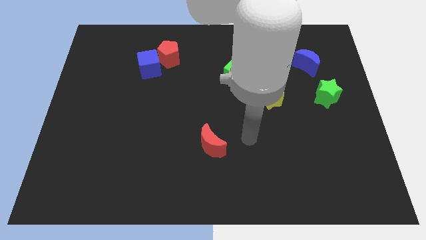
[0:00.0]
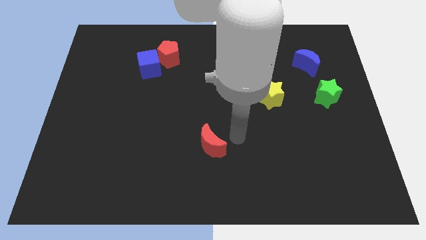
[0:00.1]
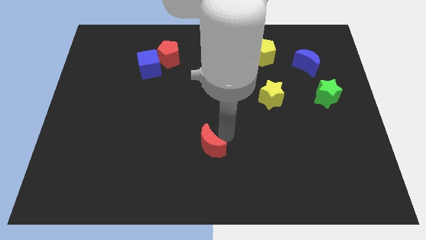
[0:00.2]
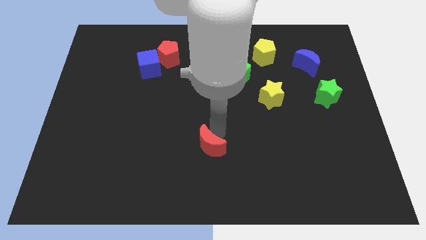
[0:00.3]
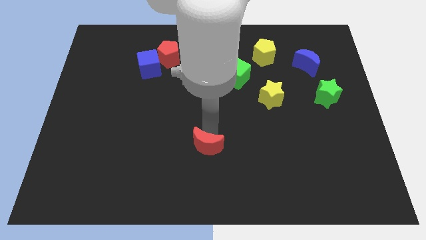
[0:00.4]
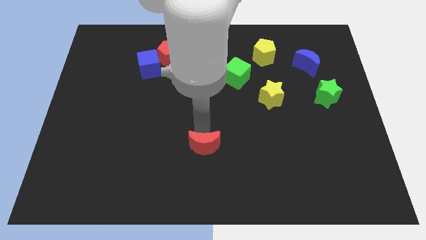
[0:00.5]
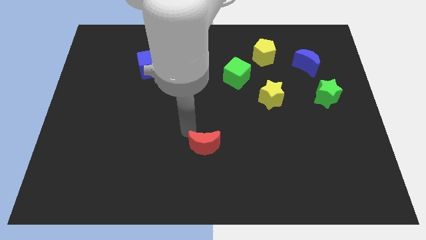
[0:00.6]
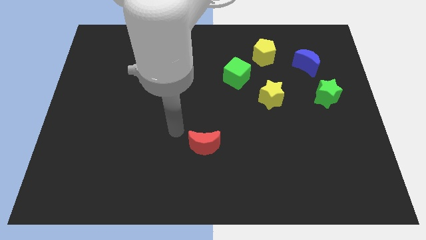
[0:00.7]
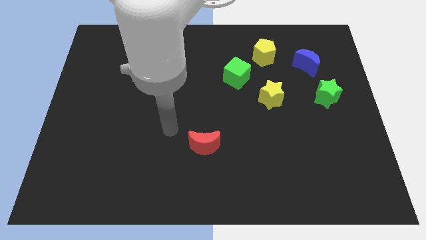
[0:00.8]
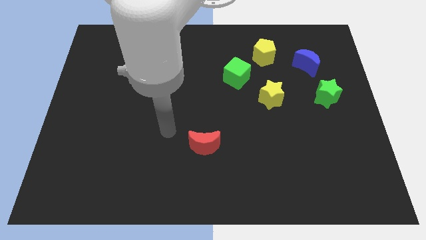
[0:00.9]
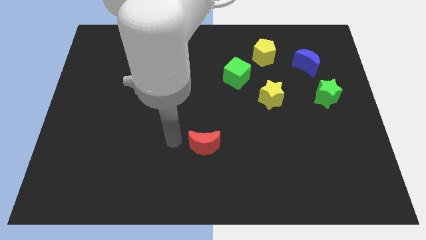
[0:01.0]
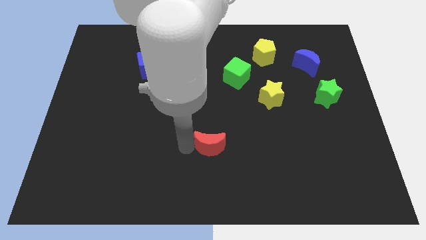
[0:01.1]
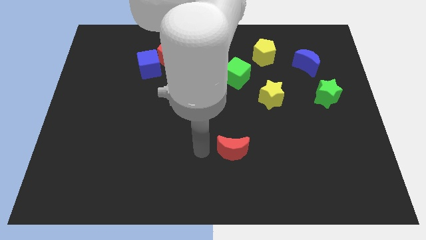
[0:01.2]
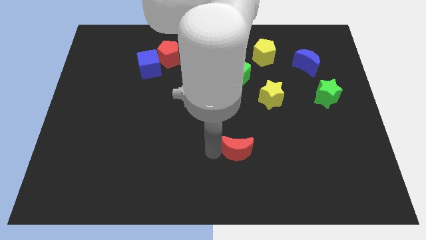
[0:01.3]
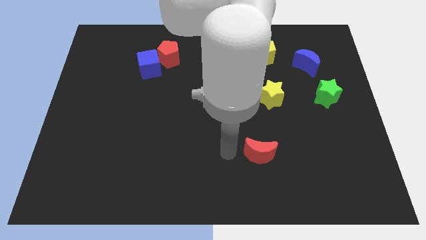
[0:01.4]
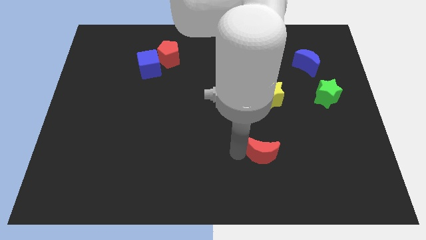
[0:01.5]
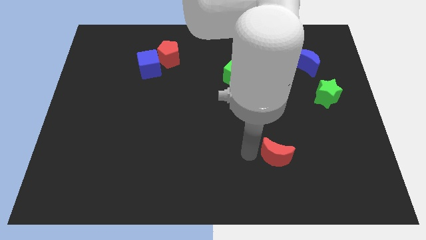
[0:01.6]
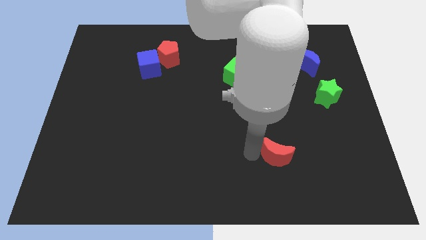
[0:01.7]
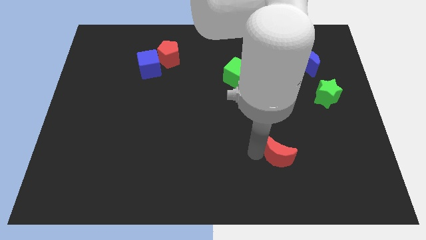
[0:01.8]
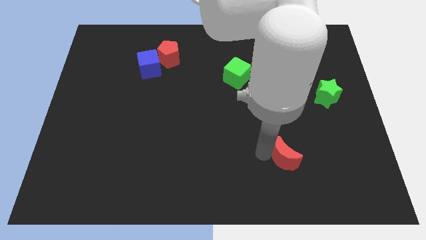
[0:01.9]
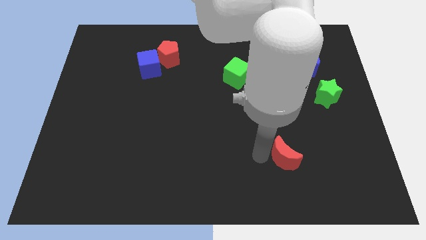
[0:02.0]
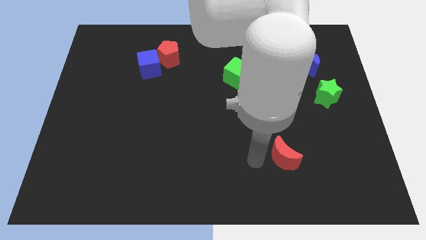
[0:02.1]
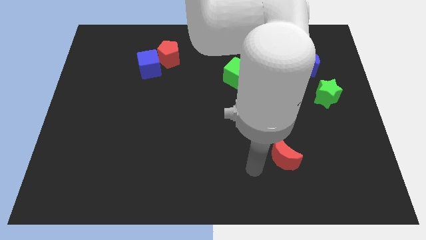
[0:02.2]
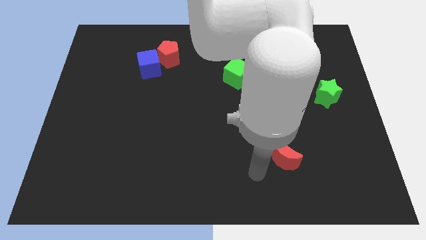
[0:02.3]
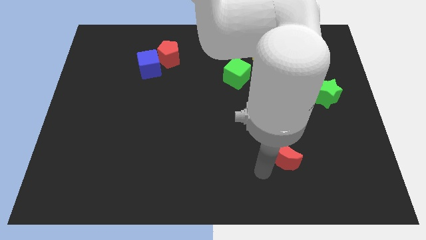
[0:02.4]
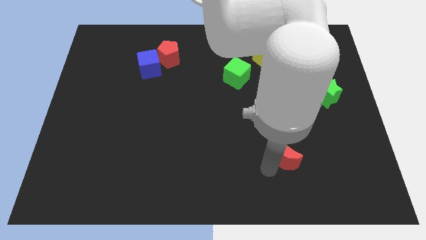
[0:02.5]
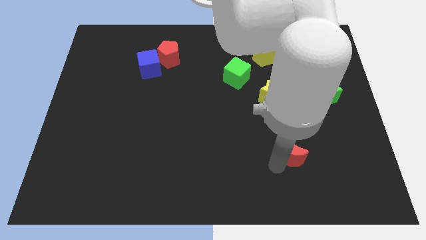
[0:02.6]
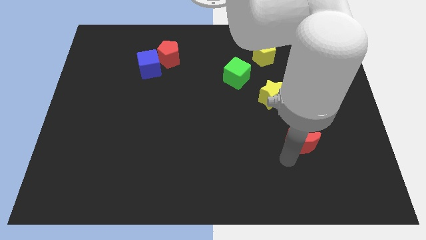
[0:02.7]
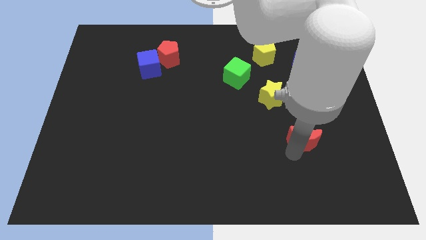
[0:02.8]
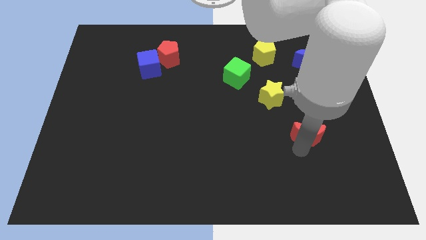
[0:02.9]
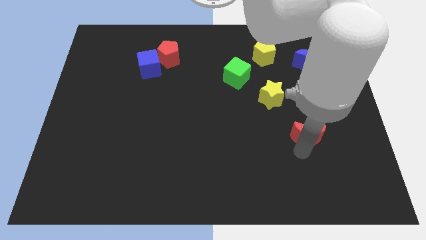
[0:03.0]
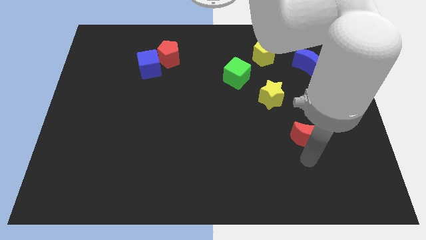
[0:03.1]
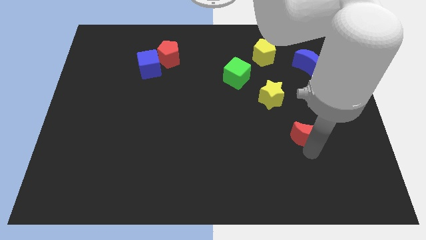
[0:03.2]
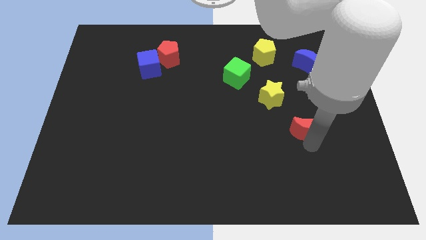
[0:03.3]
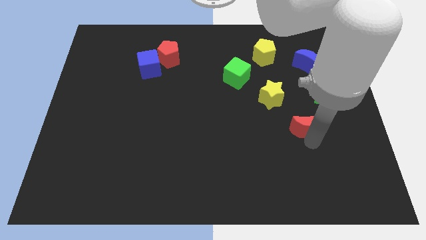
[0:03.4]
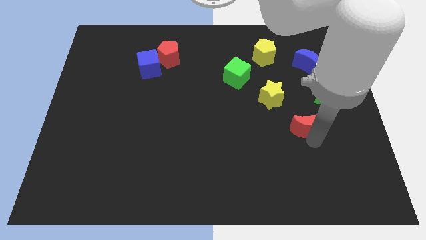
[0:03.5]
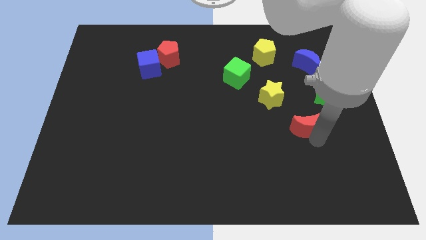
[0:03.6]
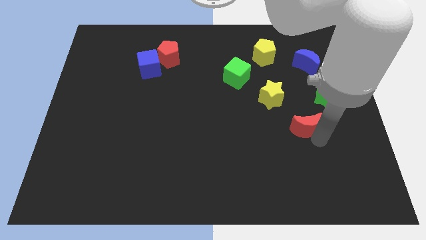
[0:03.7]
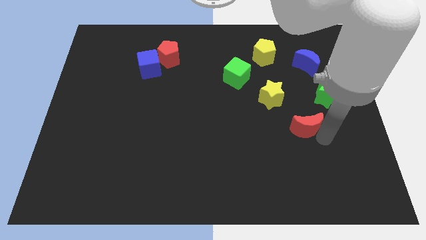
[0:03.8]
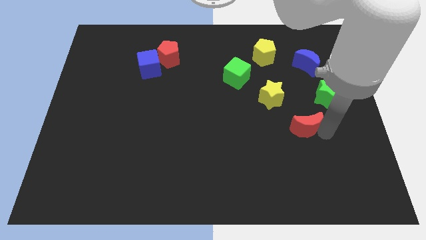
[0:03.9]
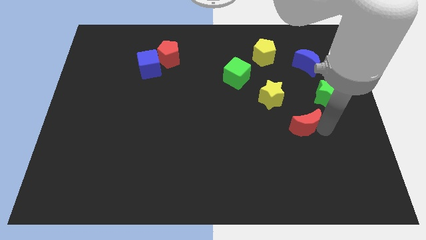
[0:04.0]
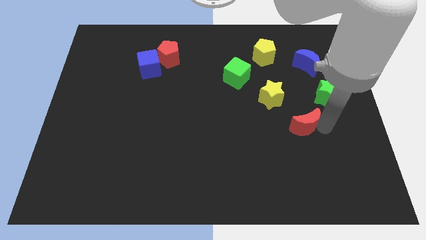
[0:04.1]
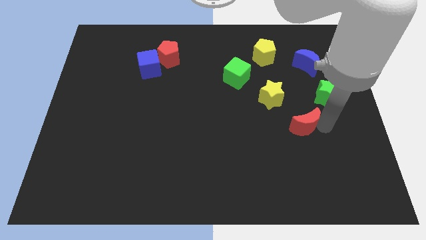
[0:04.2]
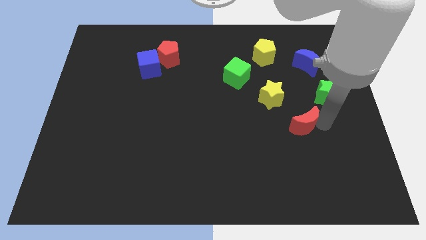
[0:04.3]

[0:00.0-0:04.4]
push the red moon towards the right side of the board

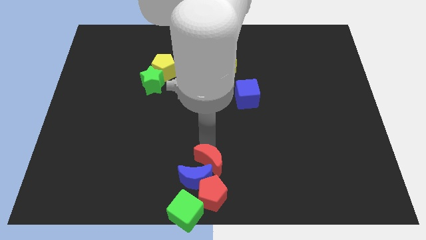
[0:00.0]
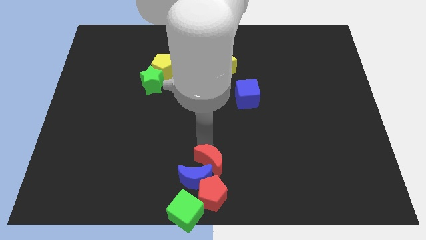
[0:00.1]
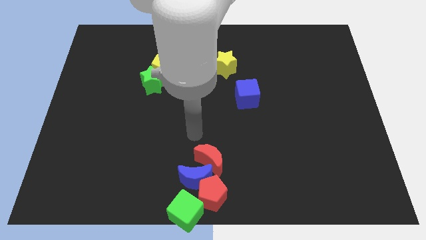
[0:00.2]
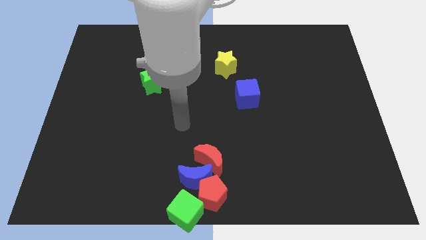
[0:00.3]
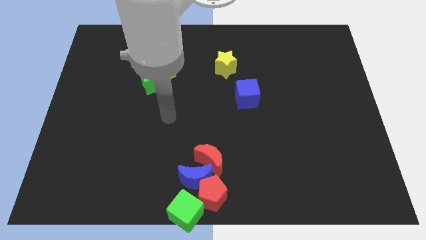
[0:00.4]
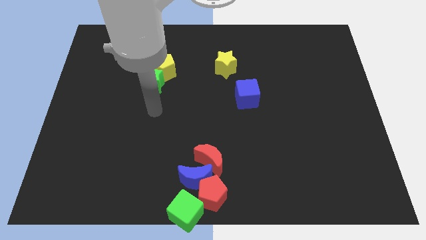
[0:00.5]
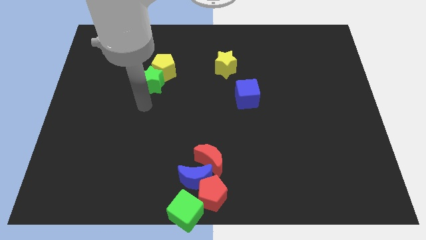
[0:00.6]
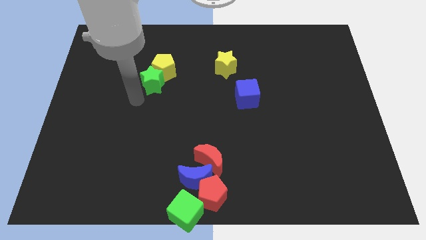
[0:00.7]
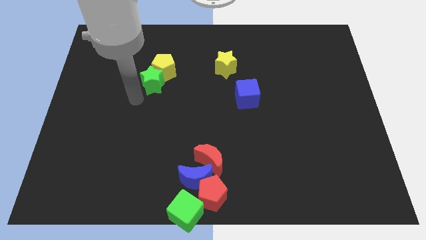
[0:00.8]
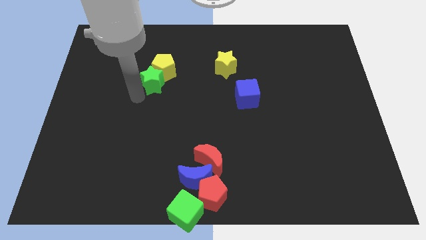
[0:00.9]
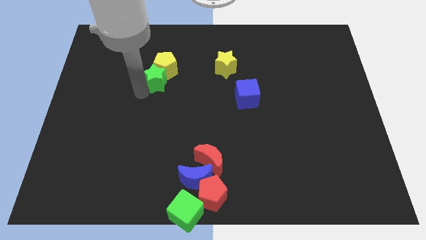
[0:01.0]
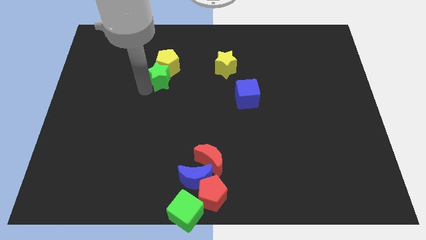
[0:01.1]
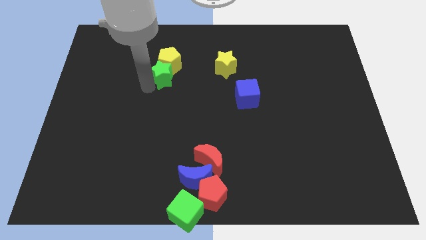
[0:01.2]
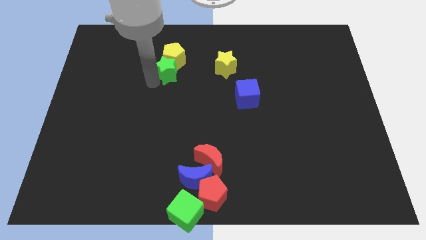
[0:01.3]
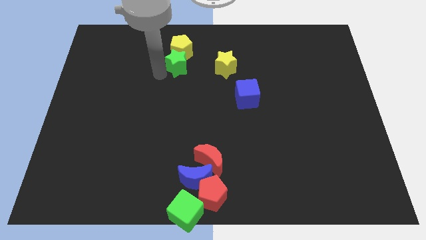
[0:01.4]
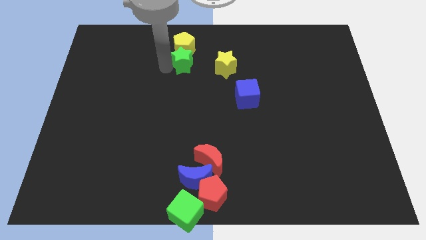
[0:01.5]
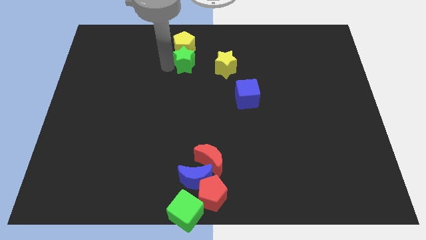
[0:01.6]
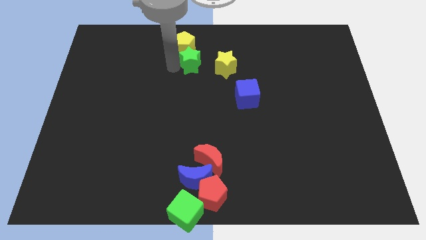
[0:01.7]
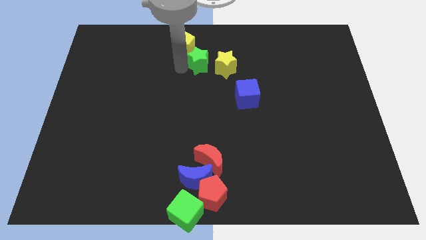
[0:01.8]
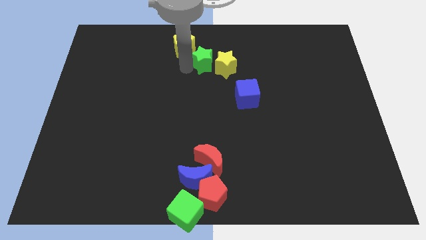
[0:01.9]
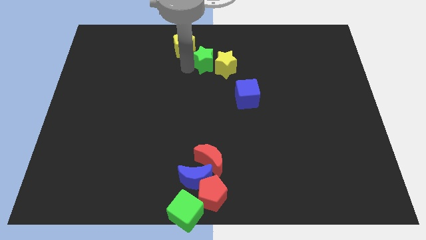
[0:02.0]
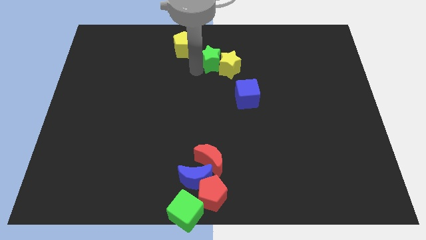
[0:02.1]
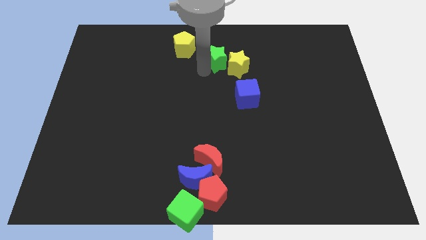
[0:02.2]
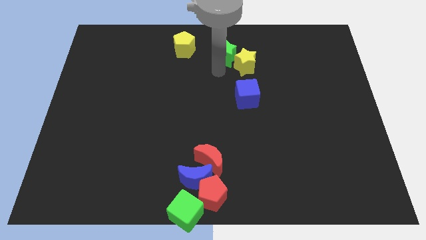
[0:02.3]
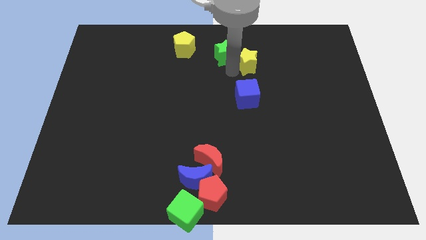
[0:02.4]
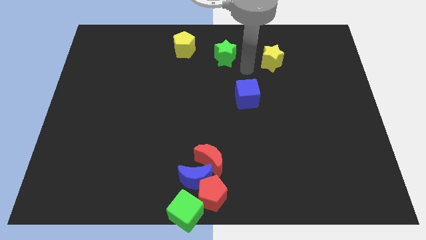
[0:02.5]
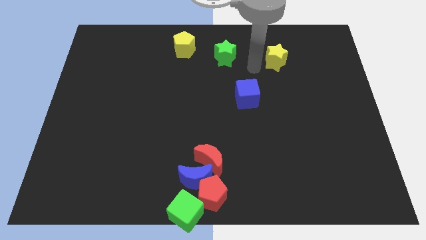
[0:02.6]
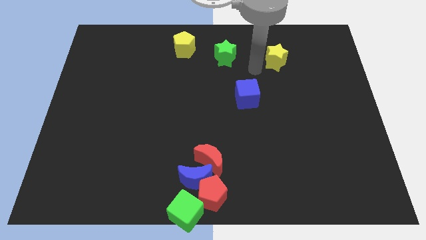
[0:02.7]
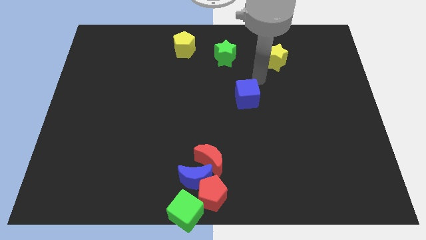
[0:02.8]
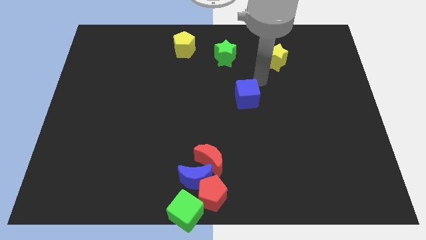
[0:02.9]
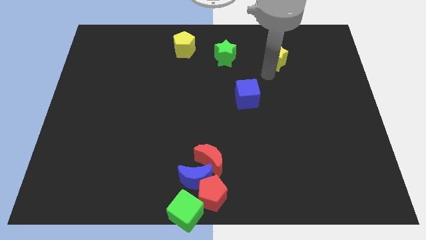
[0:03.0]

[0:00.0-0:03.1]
make a diagonal line out of green star and the yellow blocks

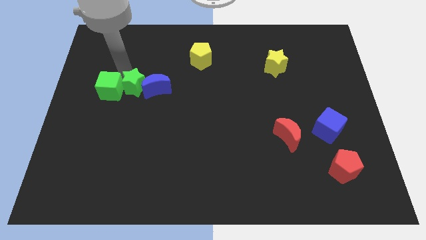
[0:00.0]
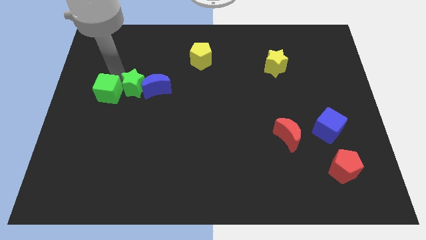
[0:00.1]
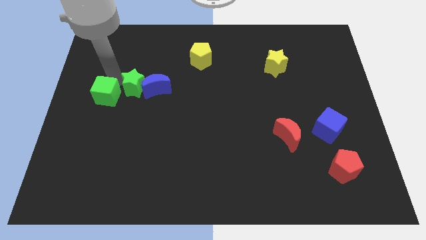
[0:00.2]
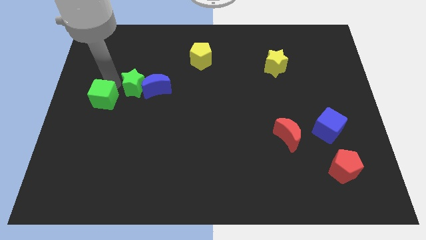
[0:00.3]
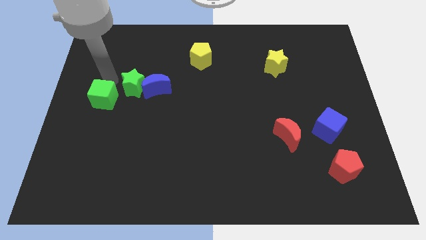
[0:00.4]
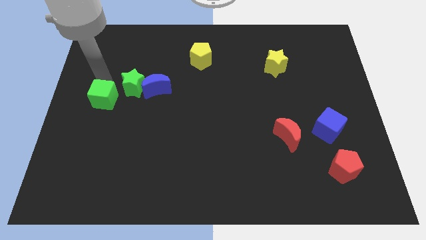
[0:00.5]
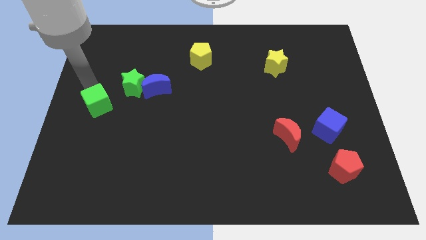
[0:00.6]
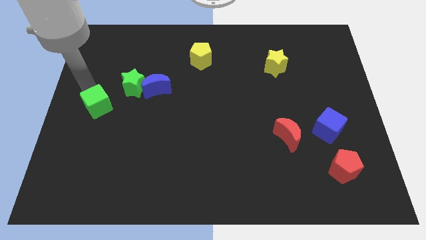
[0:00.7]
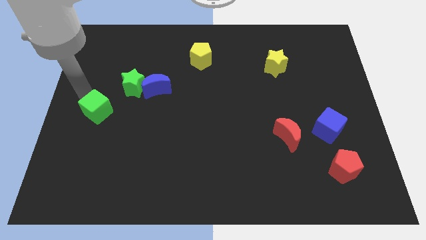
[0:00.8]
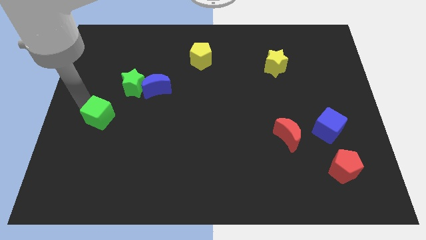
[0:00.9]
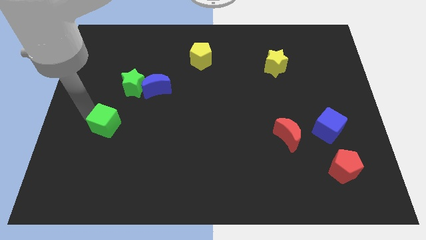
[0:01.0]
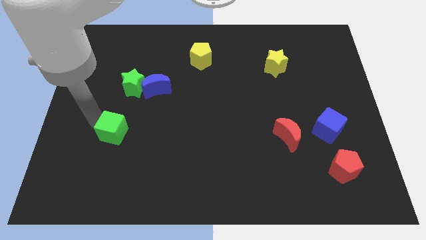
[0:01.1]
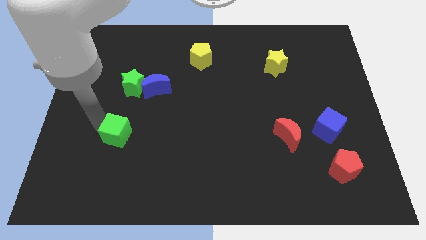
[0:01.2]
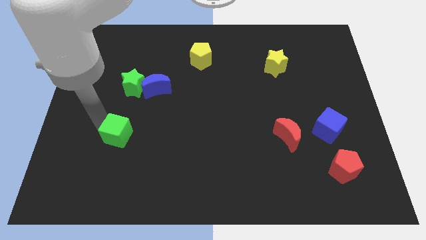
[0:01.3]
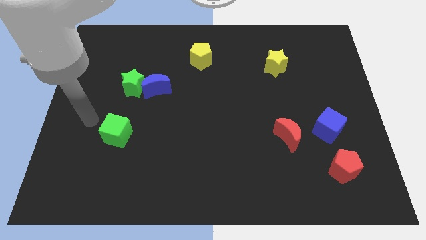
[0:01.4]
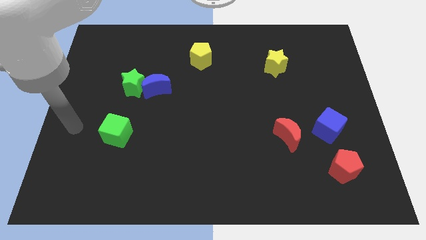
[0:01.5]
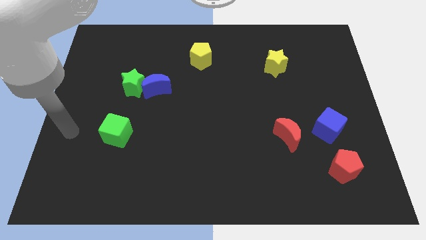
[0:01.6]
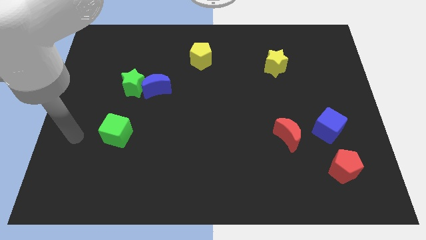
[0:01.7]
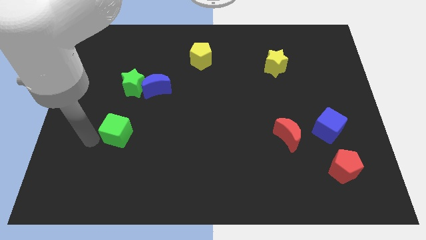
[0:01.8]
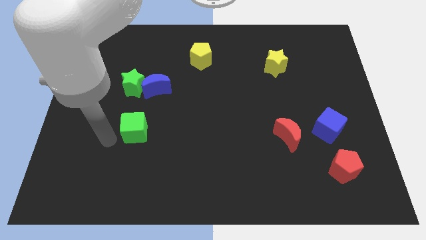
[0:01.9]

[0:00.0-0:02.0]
separate green cube from the green star and blue moon
